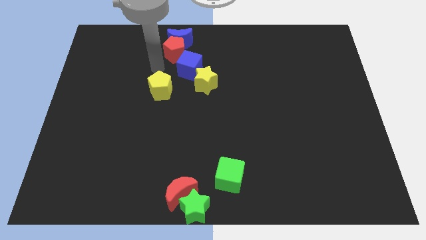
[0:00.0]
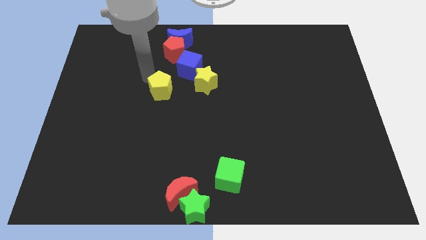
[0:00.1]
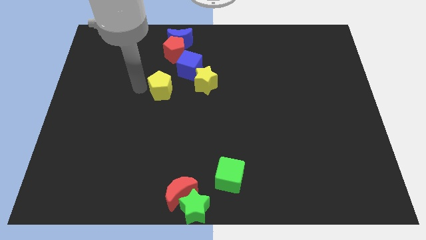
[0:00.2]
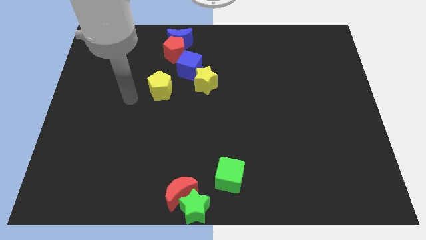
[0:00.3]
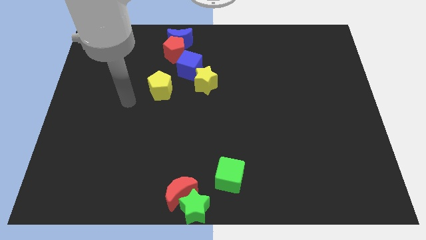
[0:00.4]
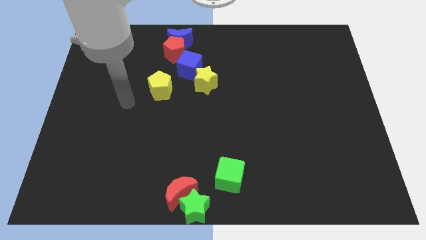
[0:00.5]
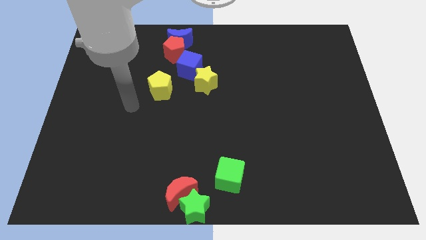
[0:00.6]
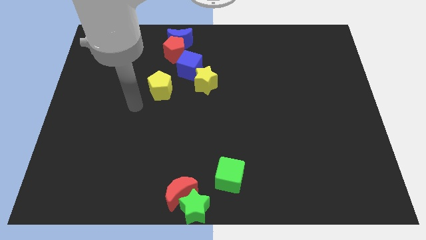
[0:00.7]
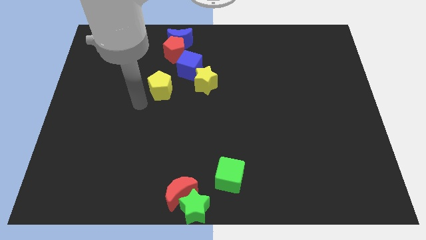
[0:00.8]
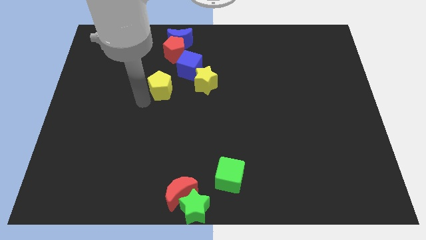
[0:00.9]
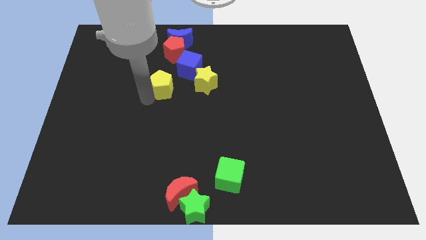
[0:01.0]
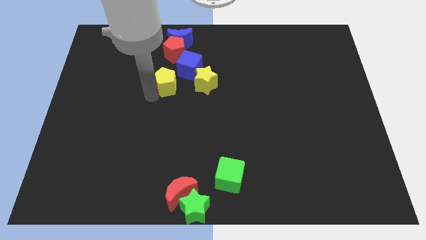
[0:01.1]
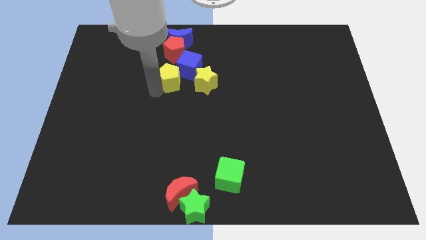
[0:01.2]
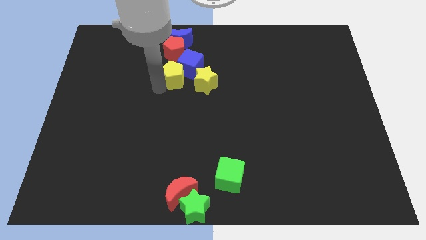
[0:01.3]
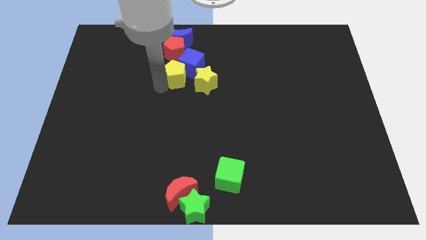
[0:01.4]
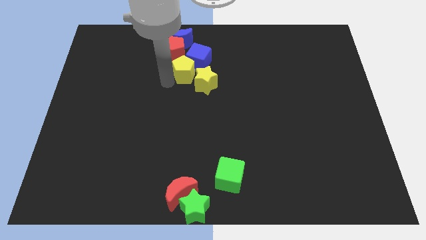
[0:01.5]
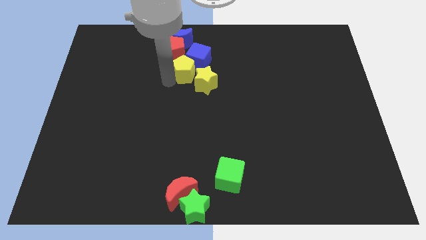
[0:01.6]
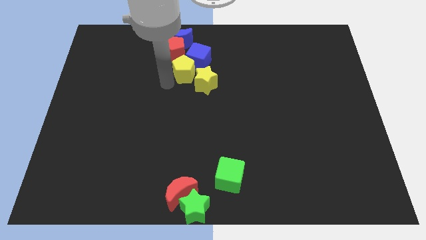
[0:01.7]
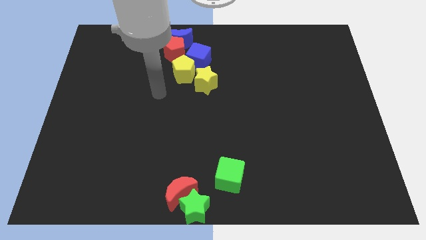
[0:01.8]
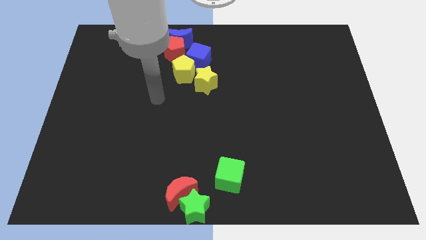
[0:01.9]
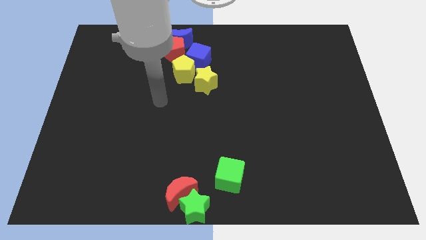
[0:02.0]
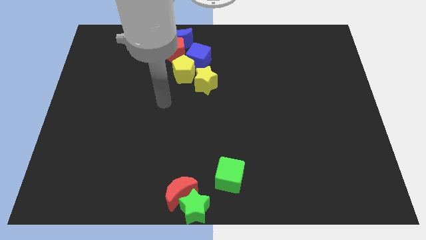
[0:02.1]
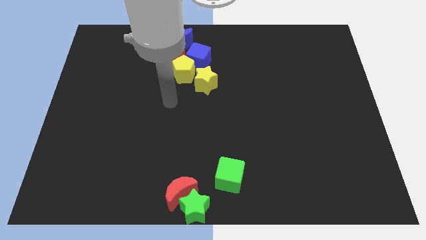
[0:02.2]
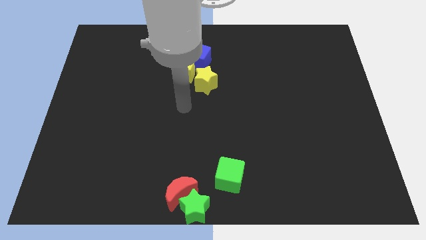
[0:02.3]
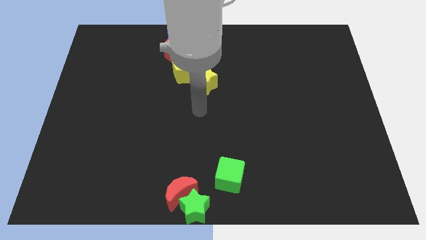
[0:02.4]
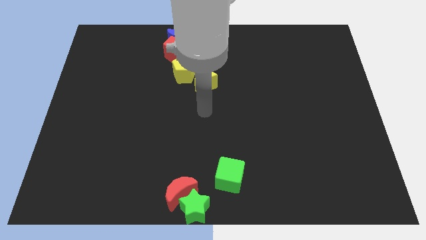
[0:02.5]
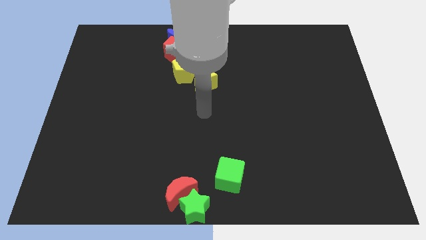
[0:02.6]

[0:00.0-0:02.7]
push the yellow pentagon along with the blue cube to the top center

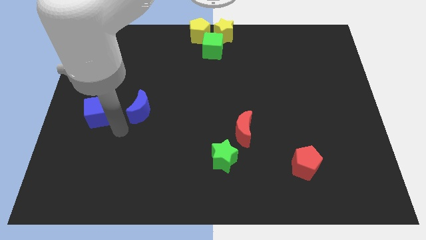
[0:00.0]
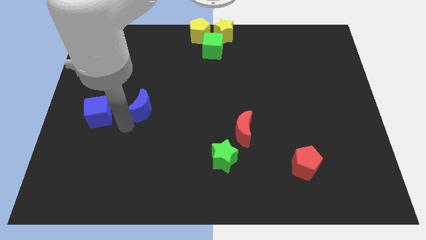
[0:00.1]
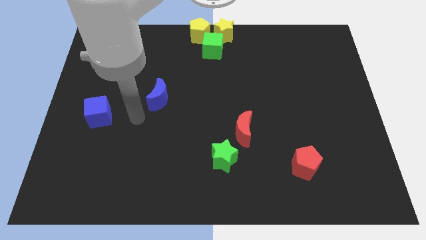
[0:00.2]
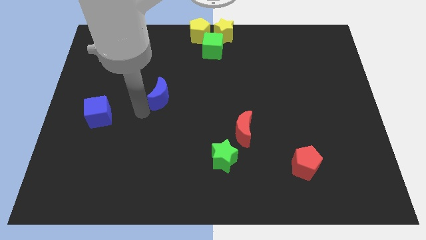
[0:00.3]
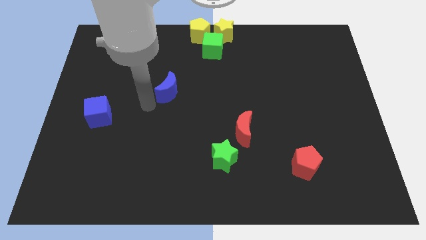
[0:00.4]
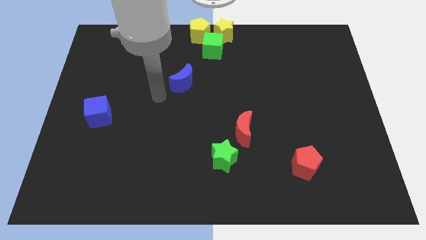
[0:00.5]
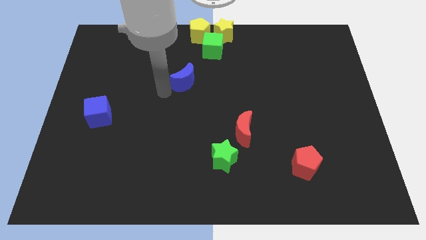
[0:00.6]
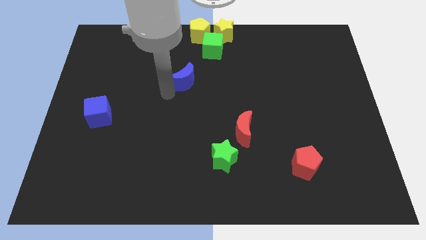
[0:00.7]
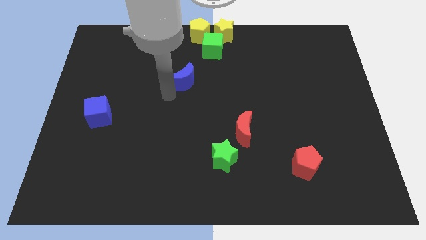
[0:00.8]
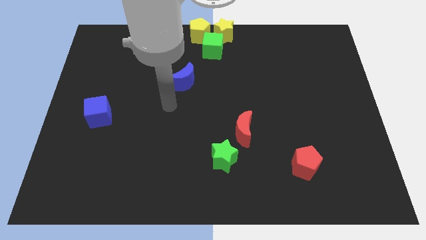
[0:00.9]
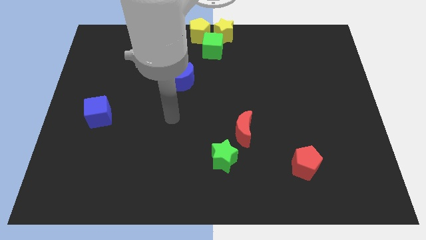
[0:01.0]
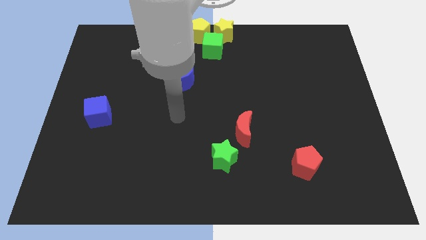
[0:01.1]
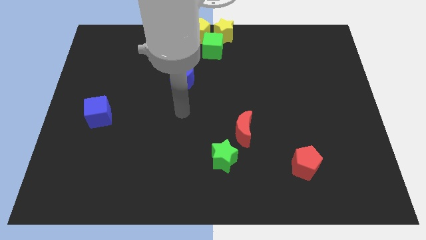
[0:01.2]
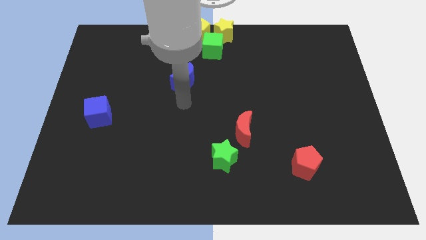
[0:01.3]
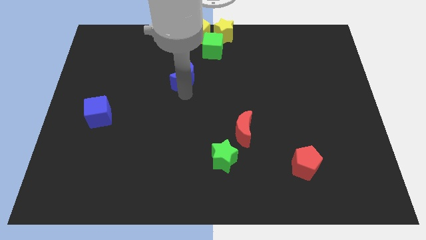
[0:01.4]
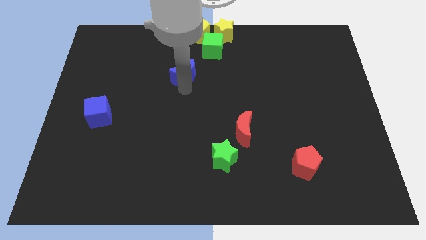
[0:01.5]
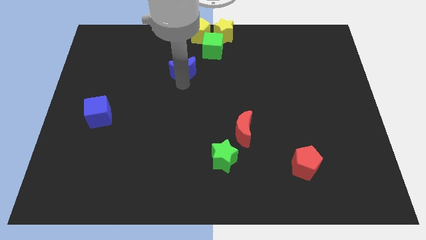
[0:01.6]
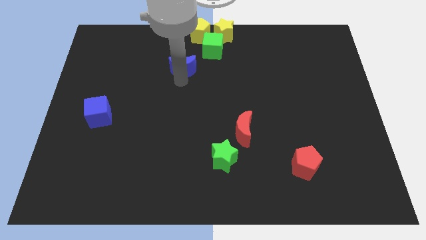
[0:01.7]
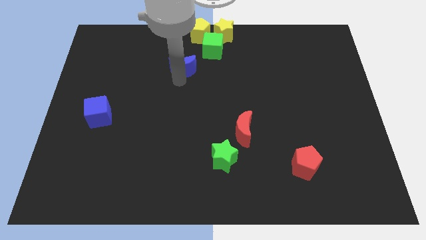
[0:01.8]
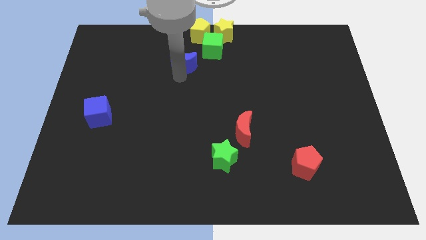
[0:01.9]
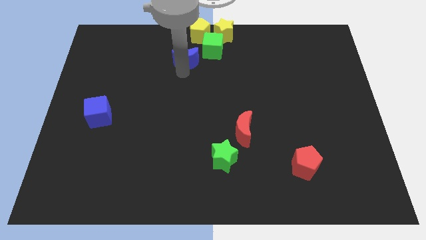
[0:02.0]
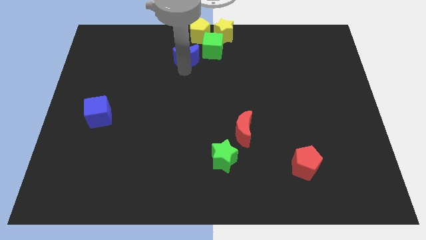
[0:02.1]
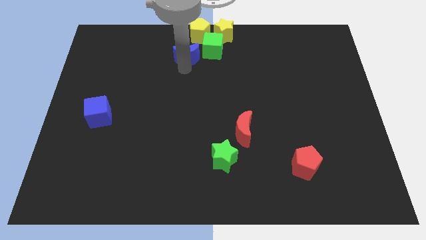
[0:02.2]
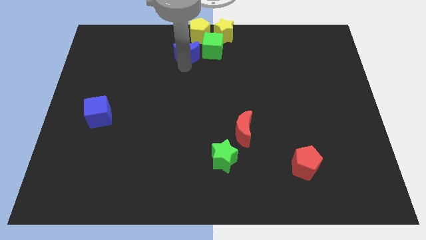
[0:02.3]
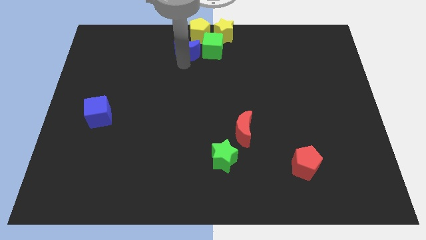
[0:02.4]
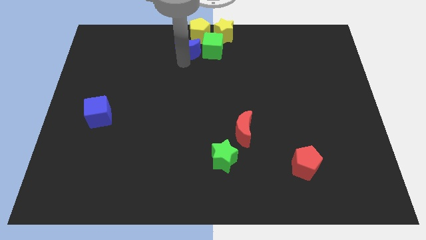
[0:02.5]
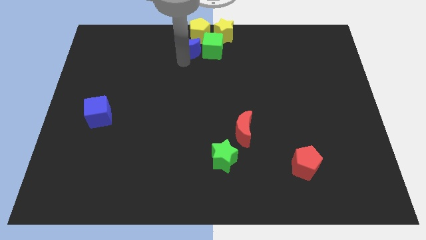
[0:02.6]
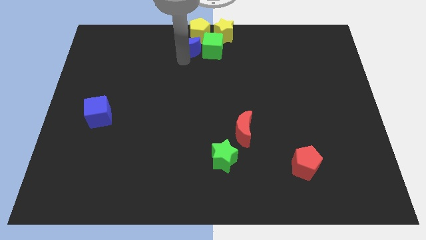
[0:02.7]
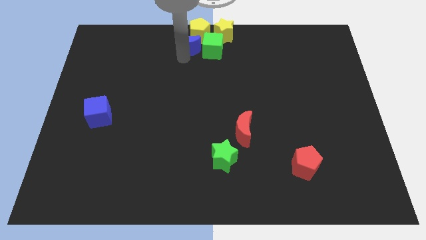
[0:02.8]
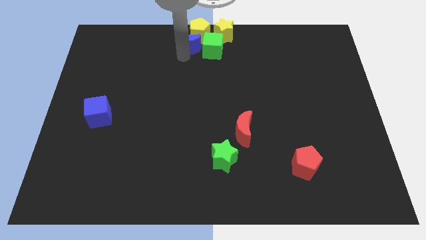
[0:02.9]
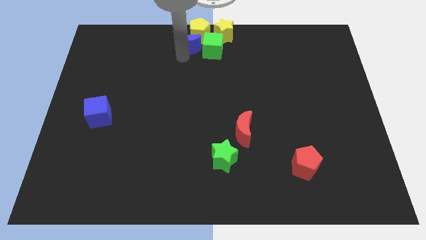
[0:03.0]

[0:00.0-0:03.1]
push the blue crescent to the left of green cube

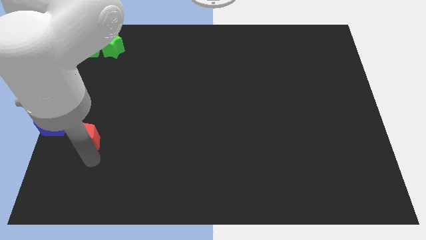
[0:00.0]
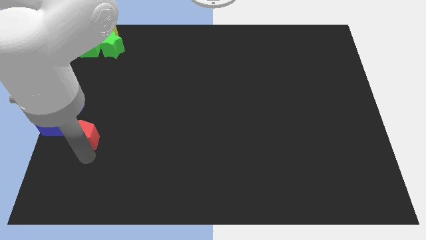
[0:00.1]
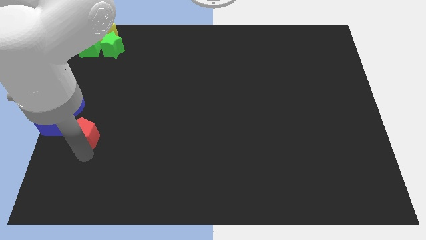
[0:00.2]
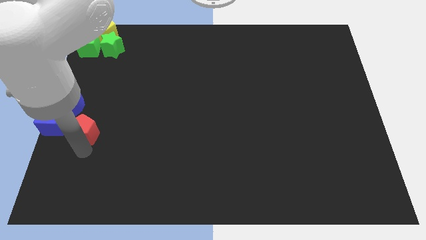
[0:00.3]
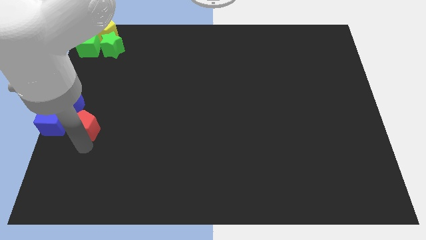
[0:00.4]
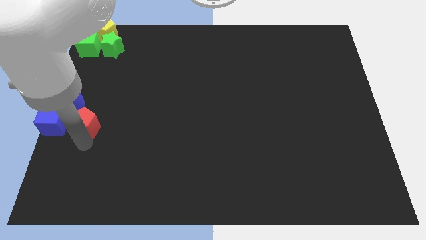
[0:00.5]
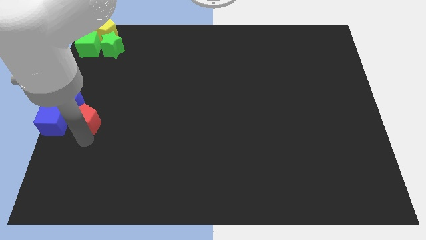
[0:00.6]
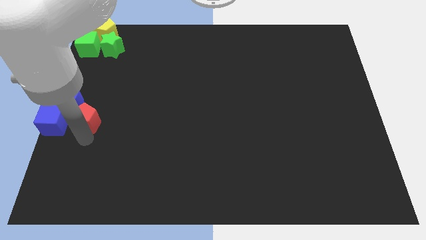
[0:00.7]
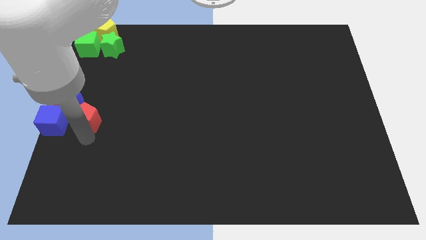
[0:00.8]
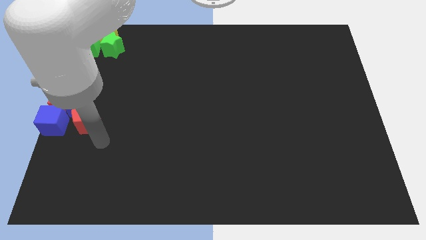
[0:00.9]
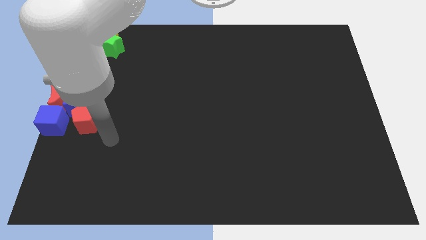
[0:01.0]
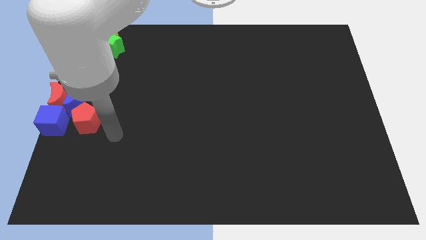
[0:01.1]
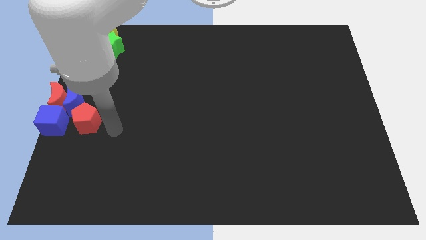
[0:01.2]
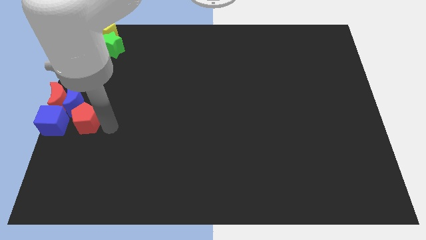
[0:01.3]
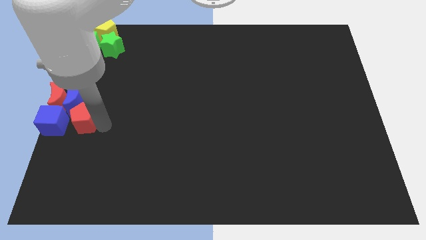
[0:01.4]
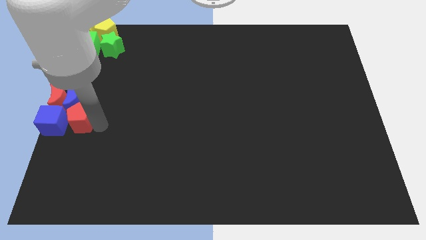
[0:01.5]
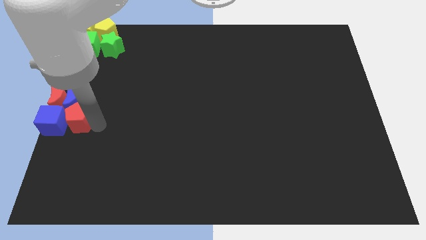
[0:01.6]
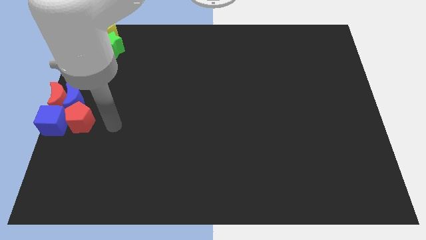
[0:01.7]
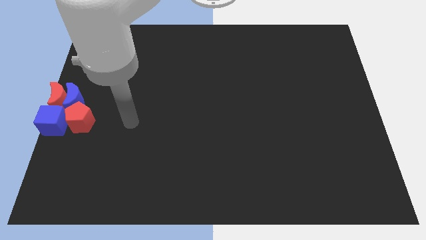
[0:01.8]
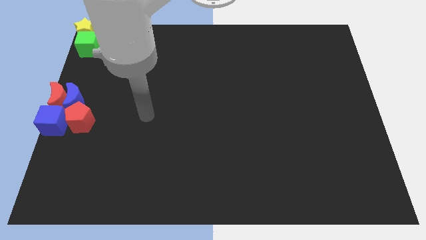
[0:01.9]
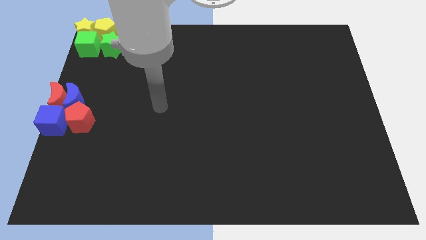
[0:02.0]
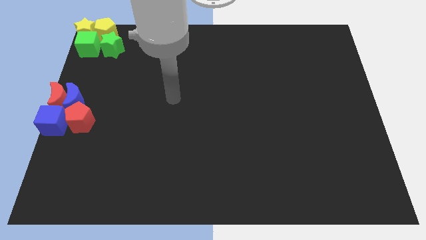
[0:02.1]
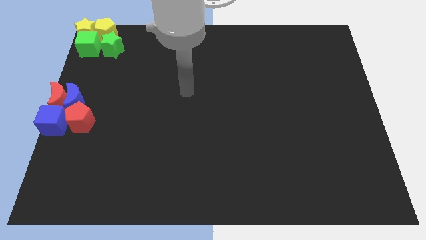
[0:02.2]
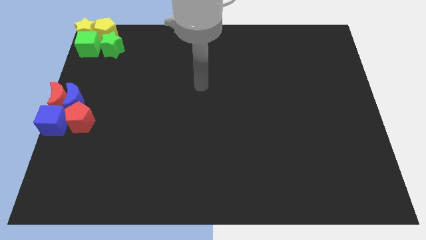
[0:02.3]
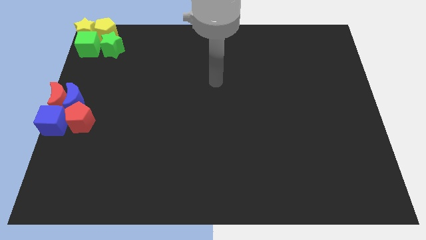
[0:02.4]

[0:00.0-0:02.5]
make a group of red crescentblue crescent blue cube and red pentagon

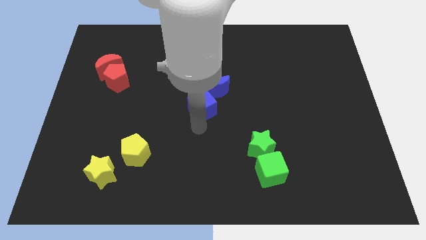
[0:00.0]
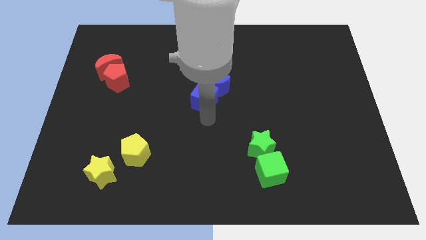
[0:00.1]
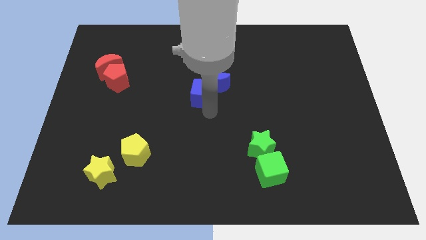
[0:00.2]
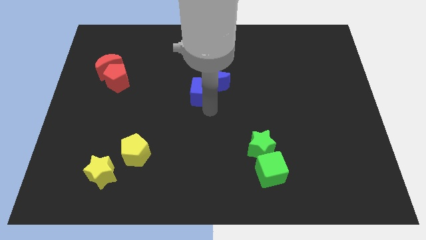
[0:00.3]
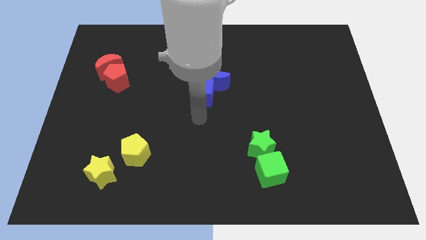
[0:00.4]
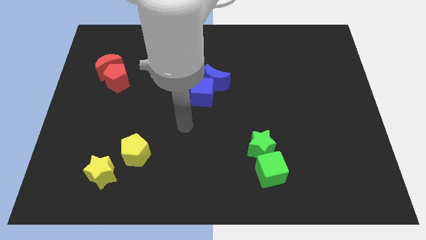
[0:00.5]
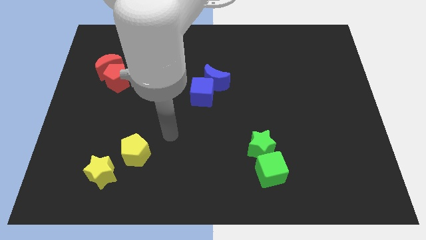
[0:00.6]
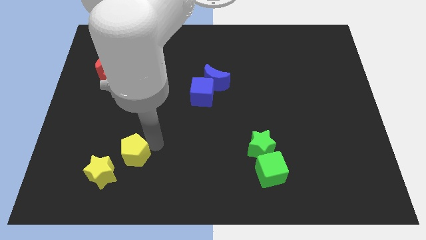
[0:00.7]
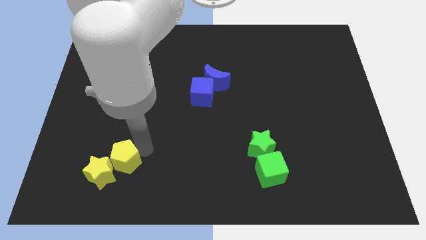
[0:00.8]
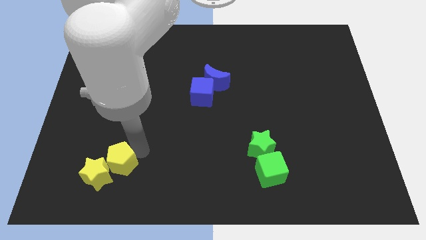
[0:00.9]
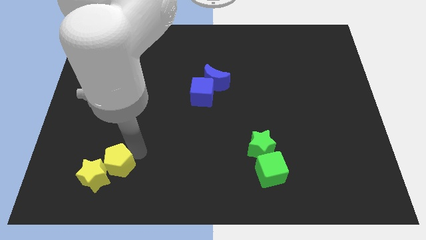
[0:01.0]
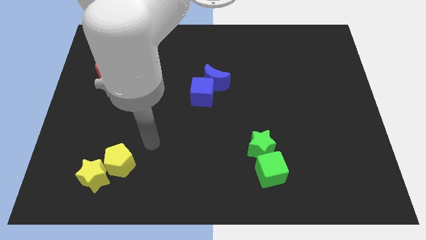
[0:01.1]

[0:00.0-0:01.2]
push the yellow pentagon into the yellow star
